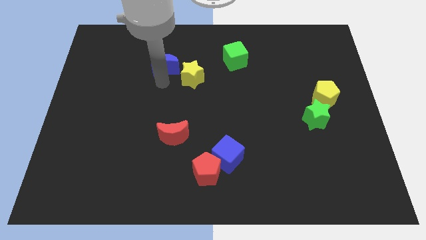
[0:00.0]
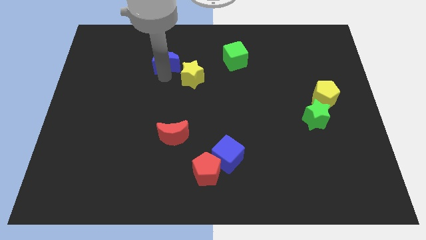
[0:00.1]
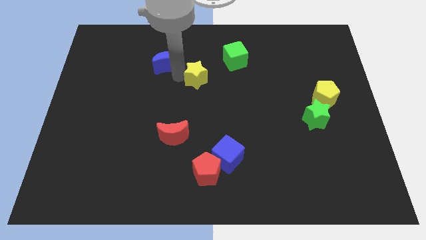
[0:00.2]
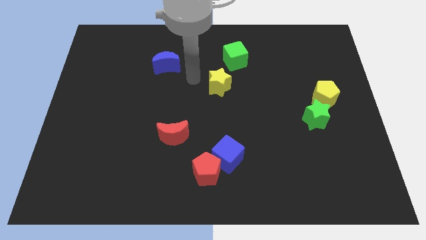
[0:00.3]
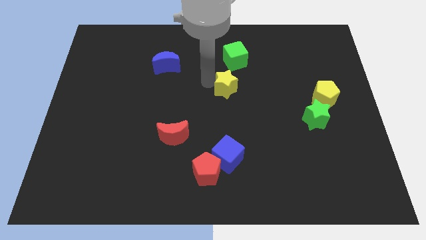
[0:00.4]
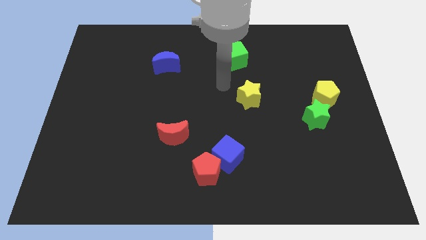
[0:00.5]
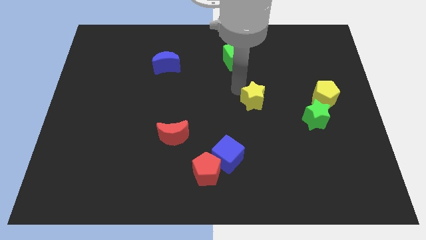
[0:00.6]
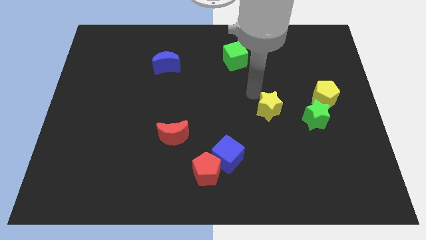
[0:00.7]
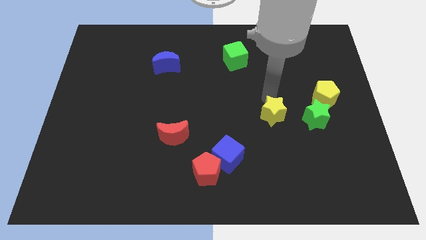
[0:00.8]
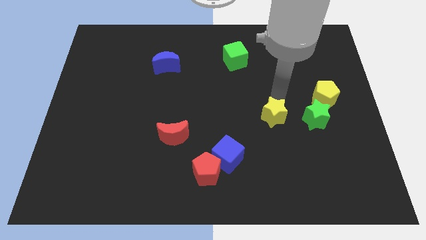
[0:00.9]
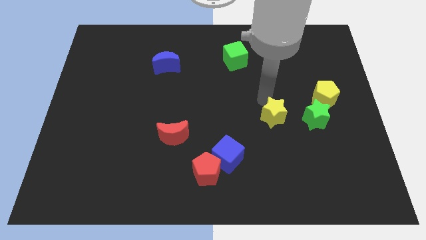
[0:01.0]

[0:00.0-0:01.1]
place the yellow star to the left of the green cube

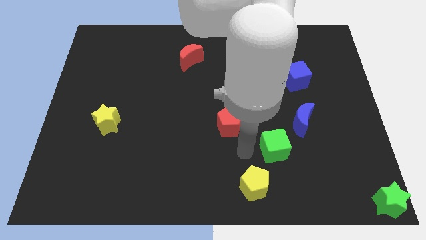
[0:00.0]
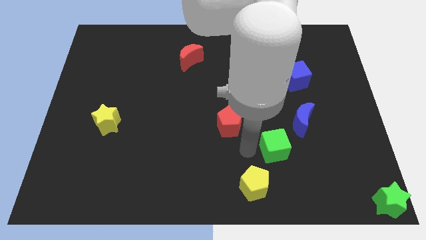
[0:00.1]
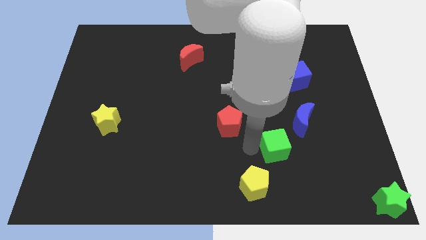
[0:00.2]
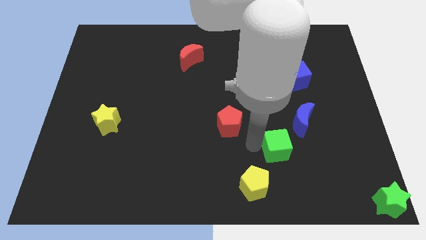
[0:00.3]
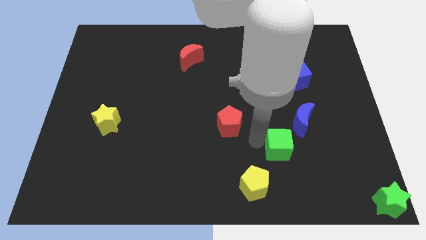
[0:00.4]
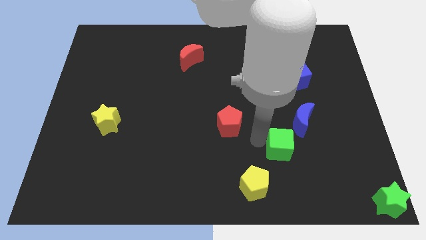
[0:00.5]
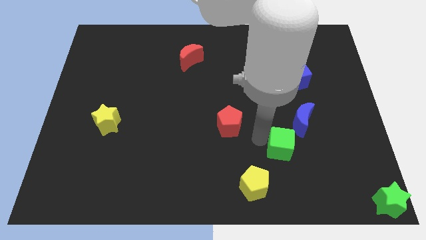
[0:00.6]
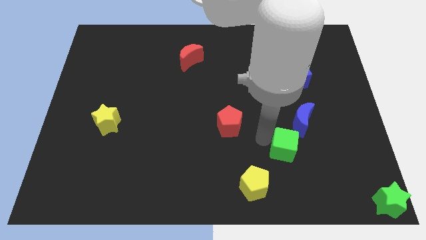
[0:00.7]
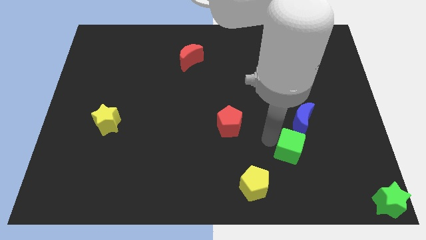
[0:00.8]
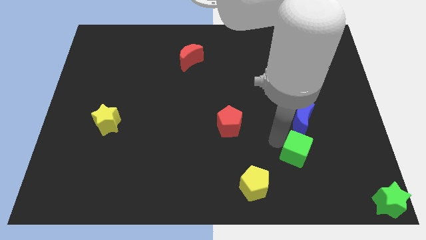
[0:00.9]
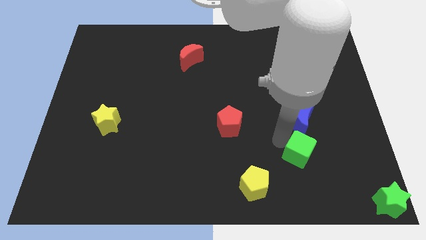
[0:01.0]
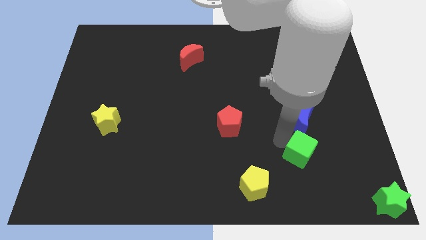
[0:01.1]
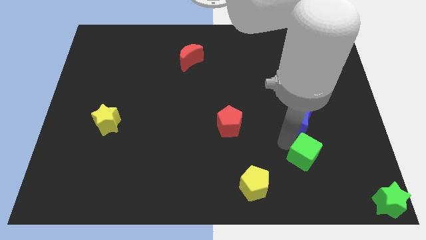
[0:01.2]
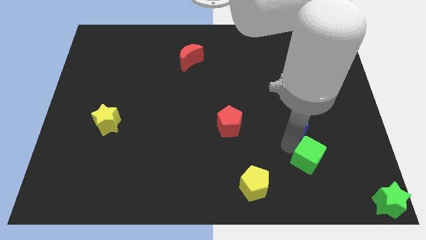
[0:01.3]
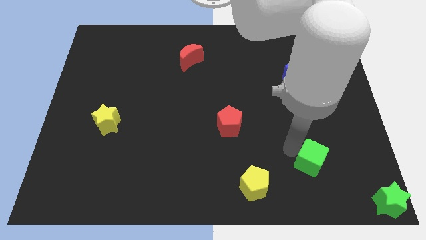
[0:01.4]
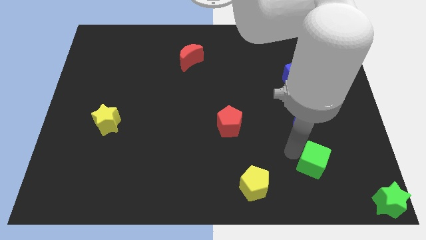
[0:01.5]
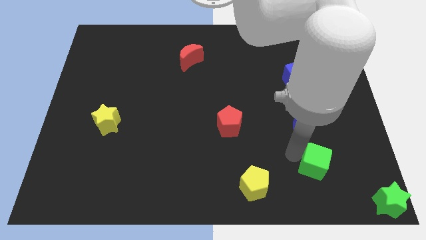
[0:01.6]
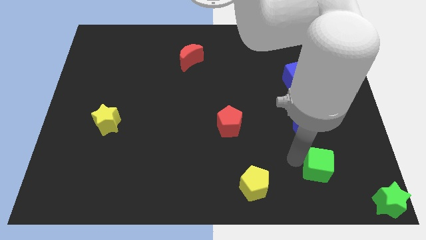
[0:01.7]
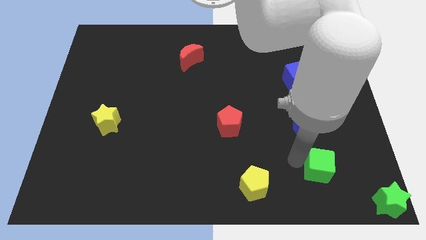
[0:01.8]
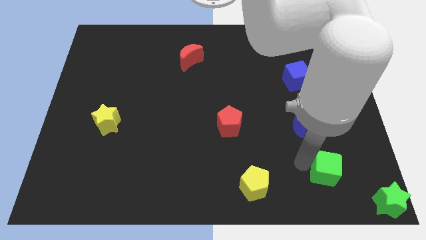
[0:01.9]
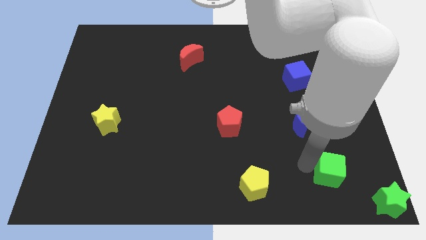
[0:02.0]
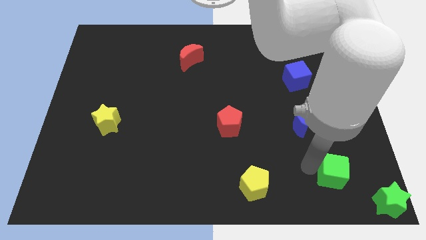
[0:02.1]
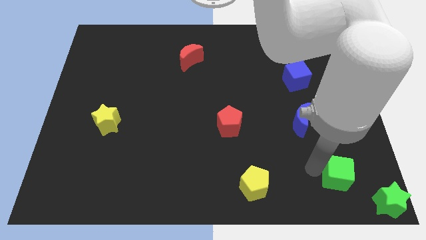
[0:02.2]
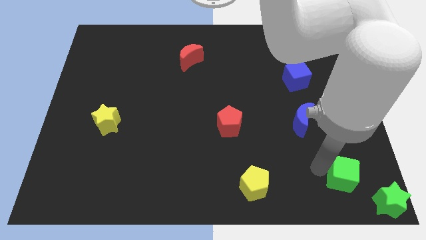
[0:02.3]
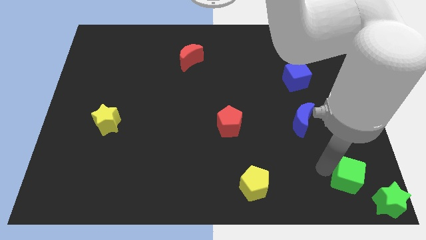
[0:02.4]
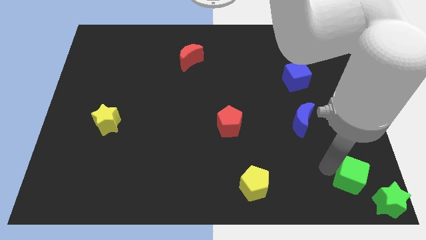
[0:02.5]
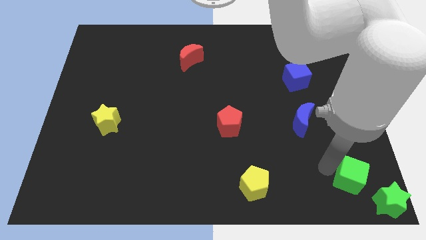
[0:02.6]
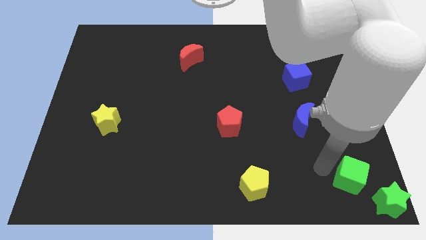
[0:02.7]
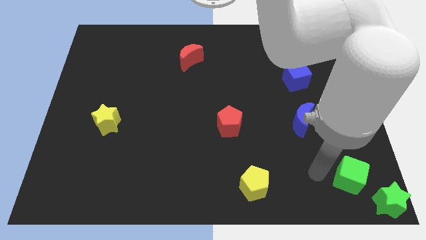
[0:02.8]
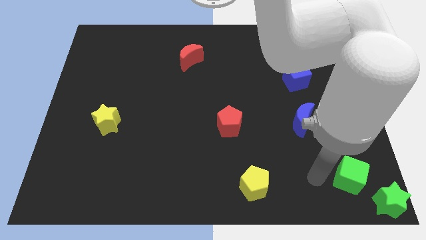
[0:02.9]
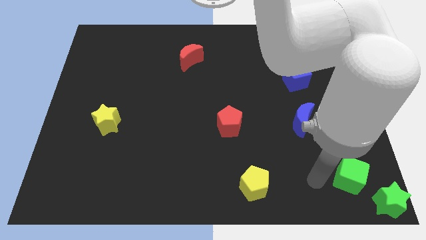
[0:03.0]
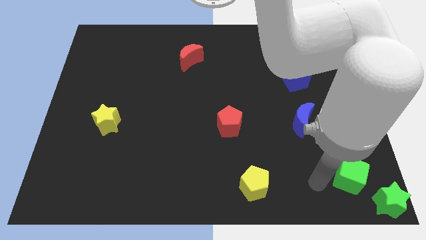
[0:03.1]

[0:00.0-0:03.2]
move the green cube diagonally to the left of the green star

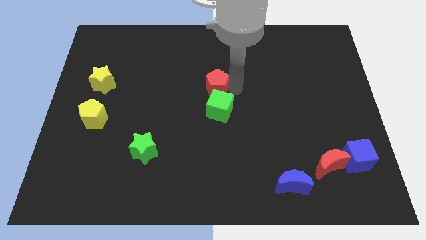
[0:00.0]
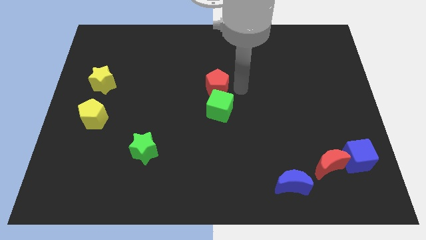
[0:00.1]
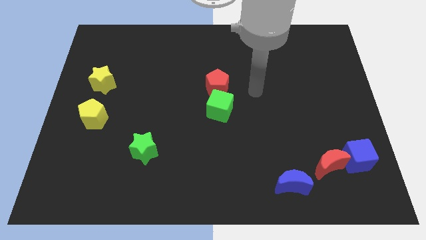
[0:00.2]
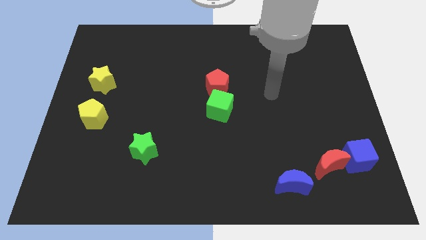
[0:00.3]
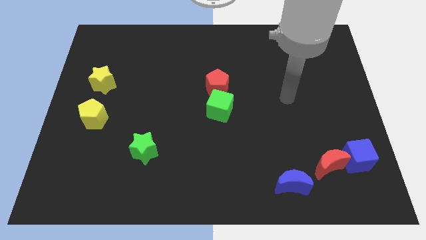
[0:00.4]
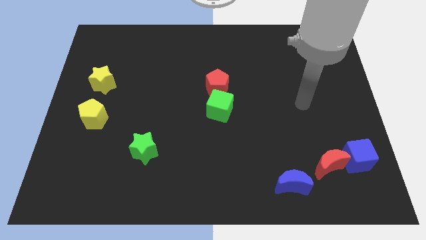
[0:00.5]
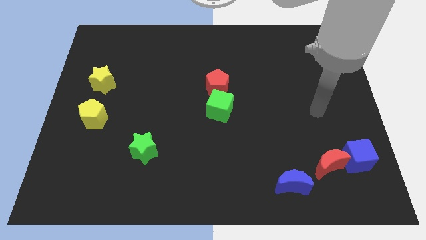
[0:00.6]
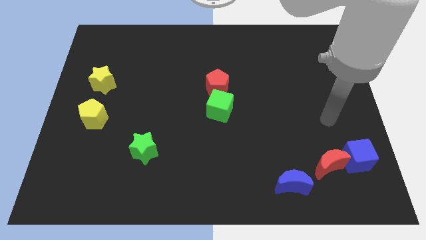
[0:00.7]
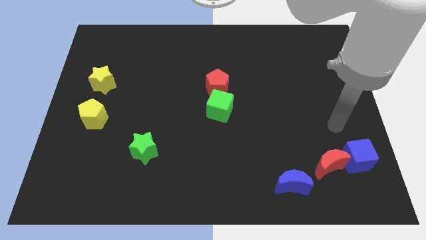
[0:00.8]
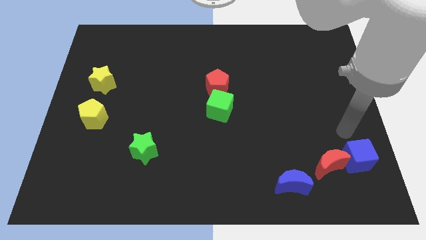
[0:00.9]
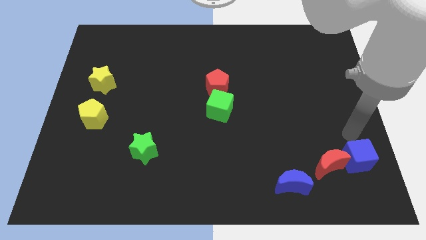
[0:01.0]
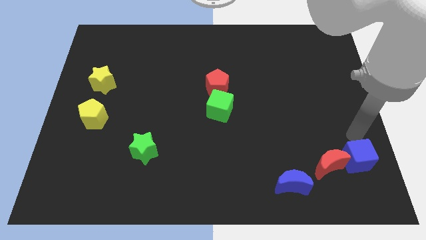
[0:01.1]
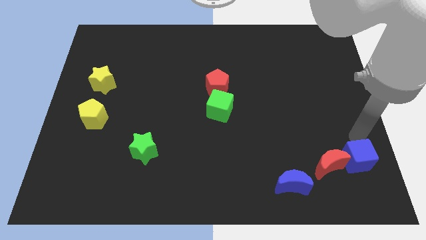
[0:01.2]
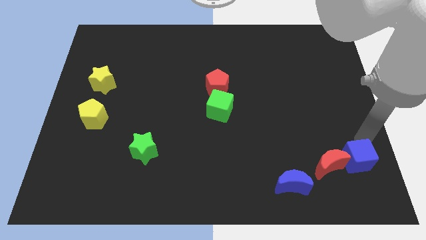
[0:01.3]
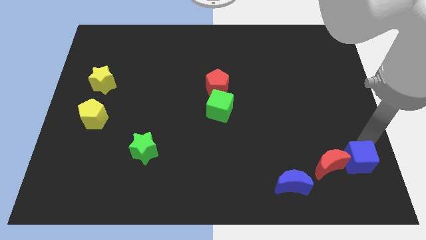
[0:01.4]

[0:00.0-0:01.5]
push your arm at the top side of the blue cube

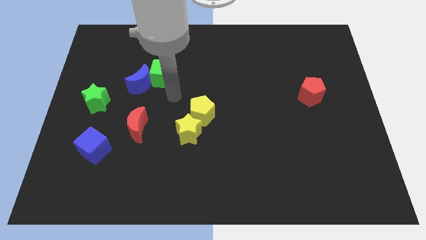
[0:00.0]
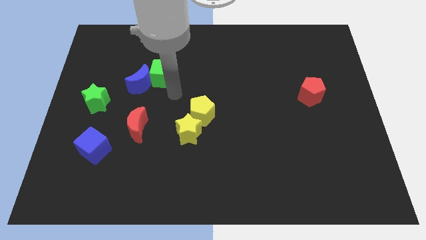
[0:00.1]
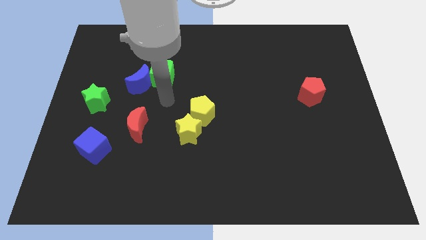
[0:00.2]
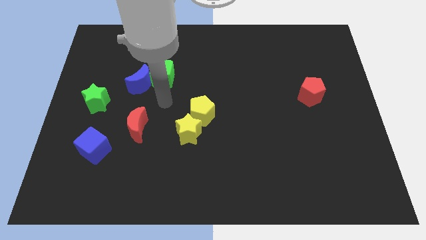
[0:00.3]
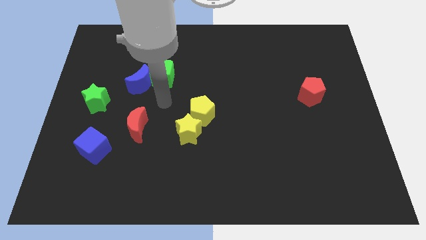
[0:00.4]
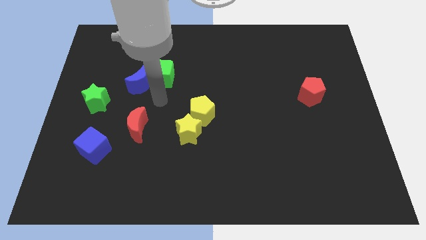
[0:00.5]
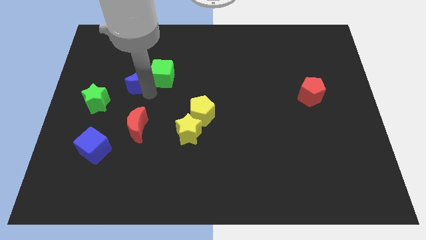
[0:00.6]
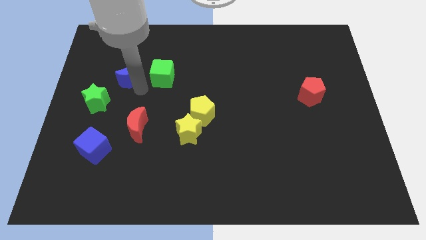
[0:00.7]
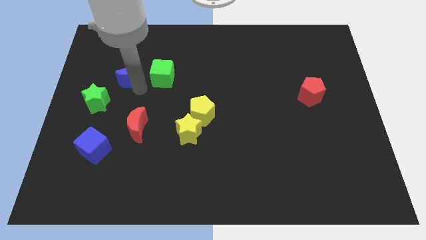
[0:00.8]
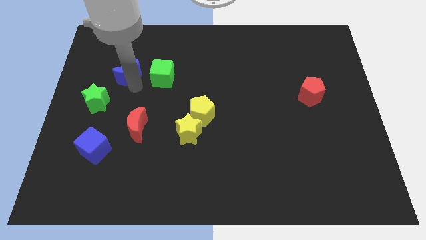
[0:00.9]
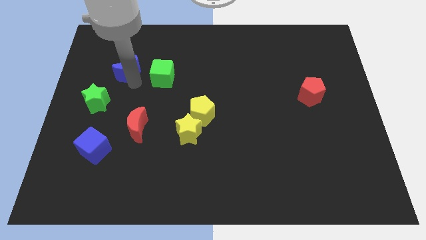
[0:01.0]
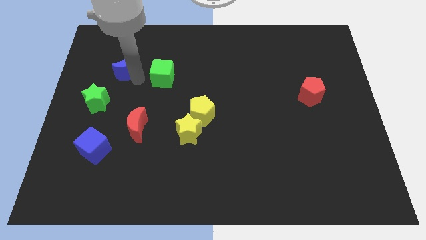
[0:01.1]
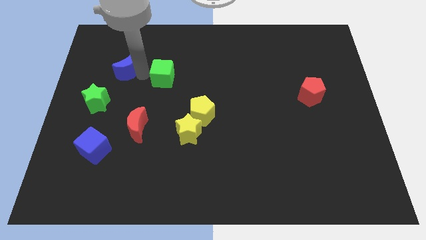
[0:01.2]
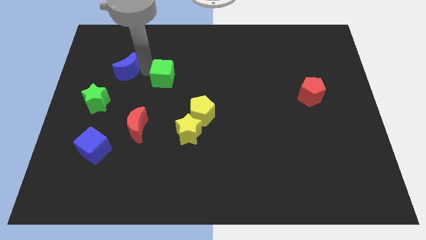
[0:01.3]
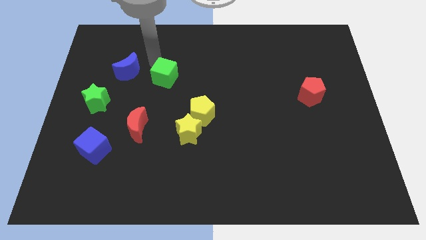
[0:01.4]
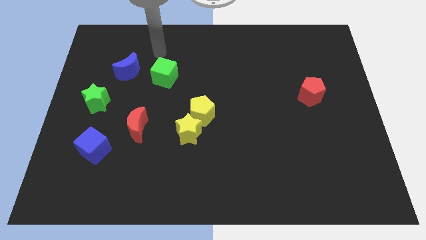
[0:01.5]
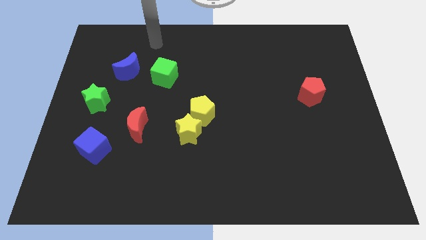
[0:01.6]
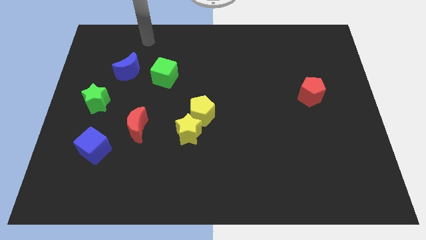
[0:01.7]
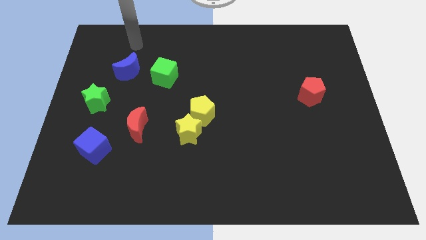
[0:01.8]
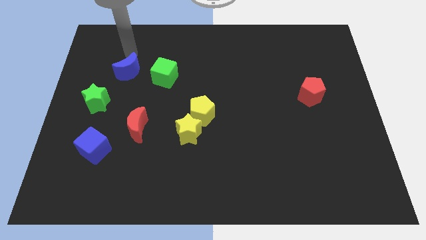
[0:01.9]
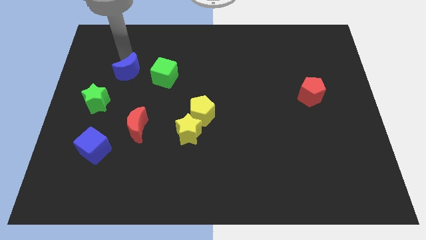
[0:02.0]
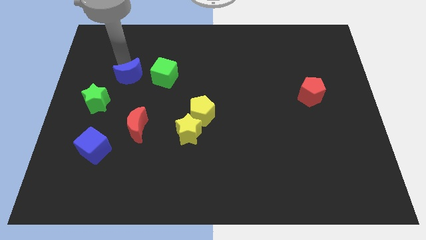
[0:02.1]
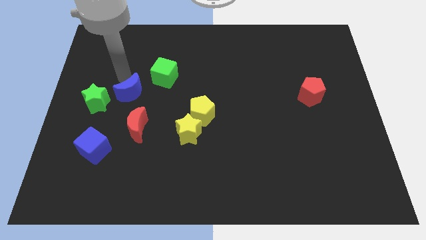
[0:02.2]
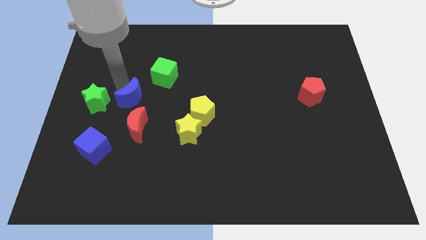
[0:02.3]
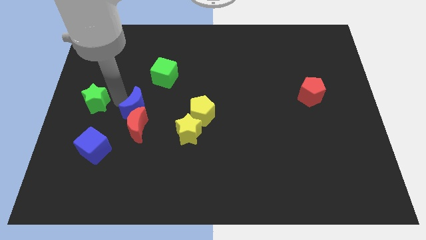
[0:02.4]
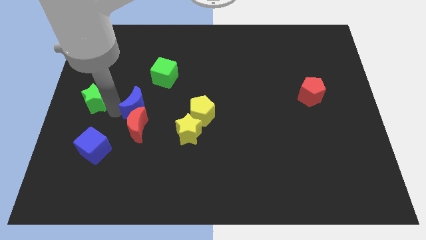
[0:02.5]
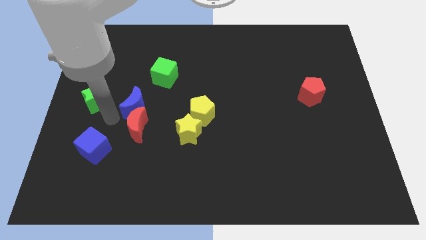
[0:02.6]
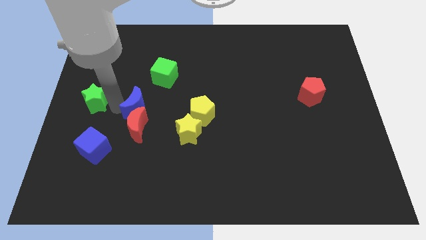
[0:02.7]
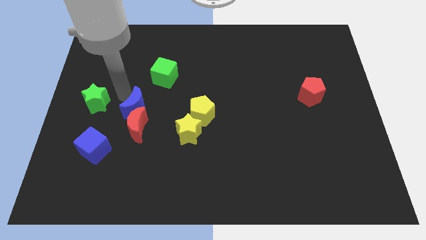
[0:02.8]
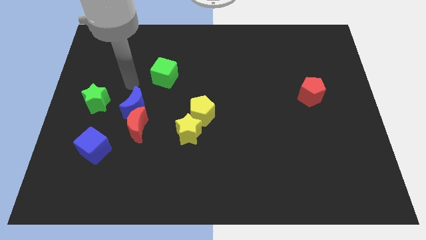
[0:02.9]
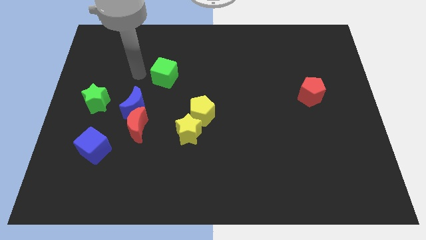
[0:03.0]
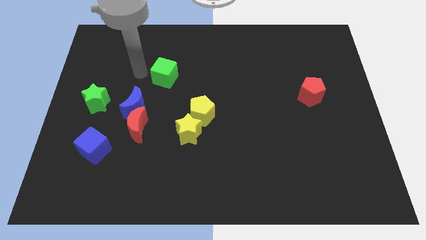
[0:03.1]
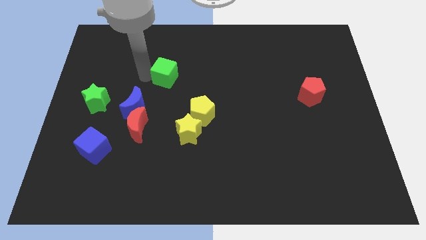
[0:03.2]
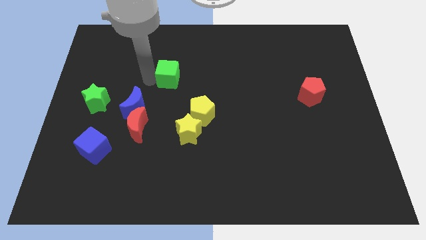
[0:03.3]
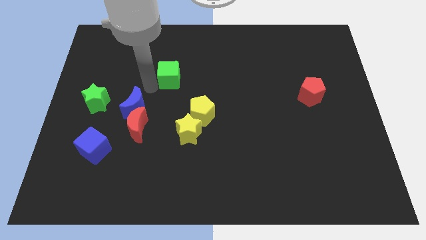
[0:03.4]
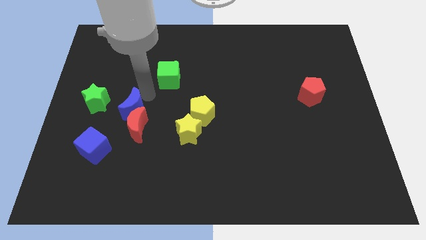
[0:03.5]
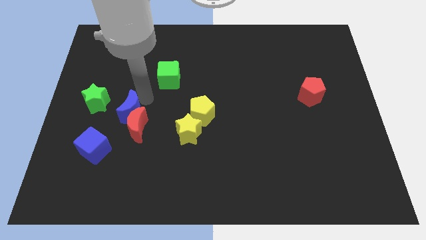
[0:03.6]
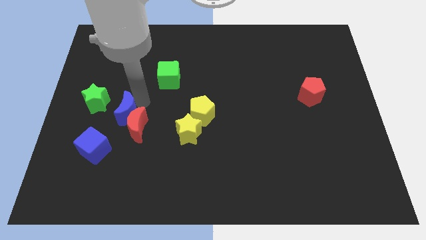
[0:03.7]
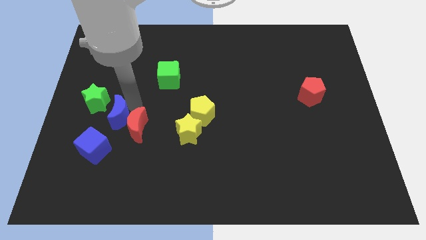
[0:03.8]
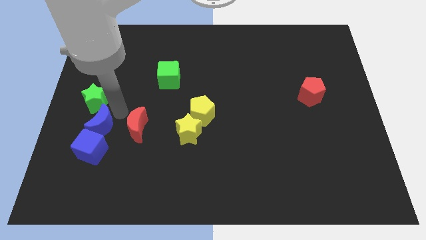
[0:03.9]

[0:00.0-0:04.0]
separate the blue moon from the green cube
